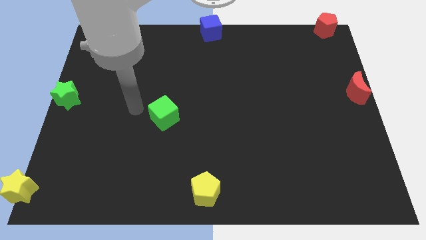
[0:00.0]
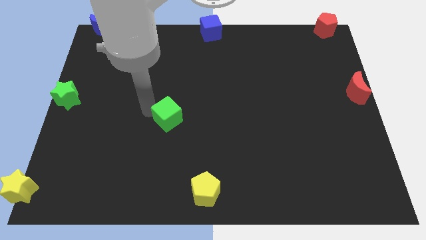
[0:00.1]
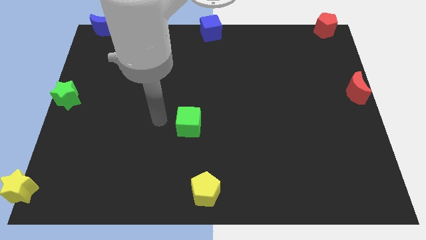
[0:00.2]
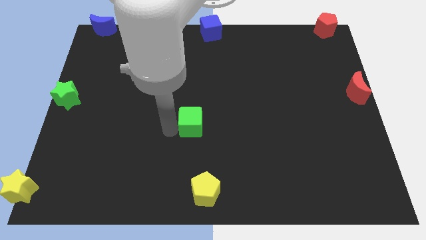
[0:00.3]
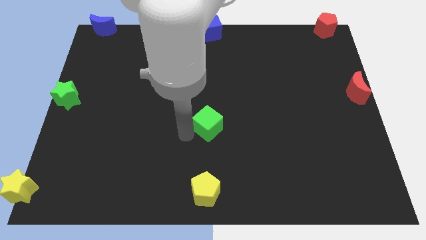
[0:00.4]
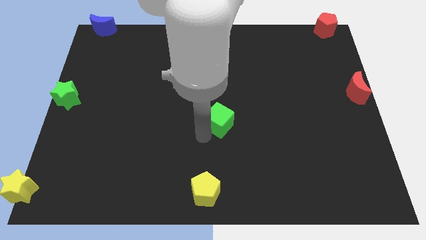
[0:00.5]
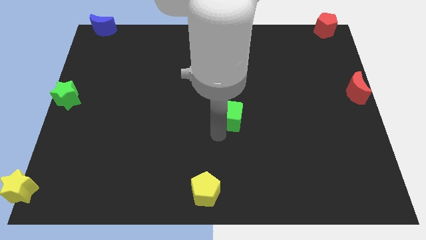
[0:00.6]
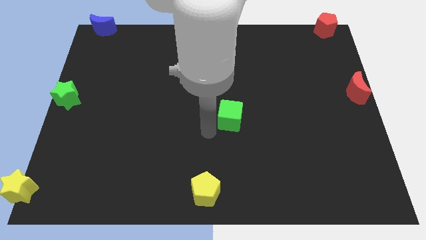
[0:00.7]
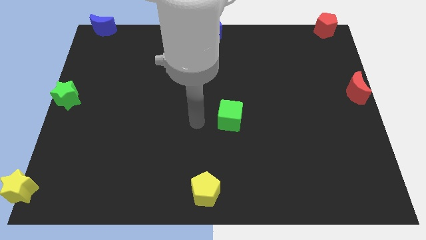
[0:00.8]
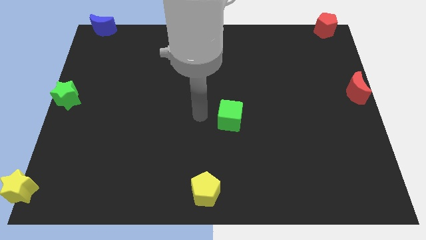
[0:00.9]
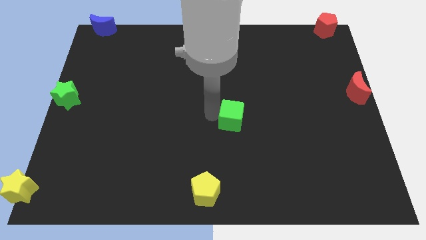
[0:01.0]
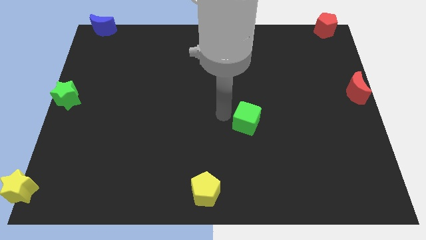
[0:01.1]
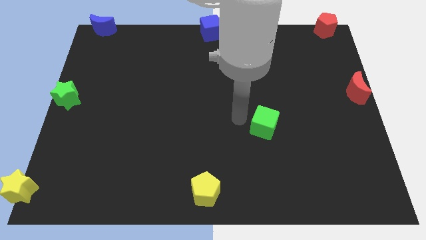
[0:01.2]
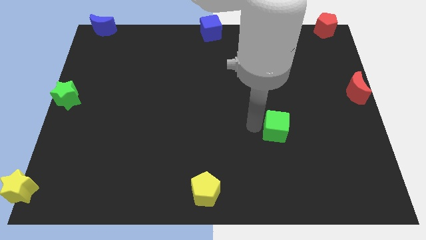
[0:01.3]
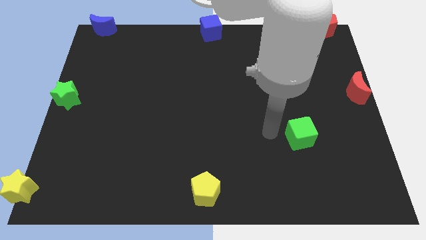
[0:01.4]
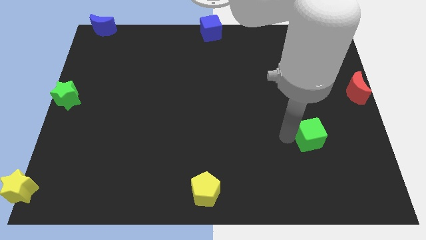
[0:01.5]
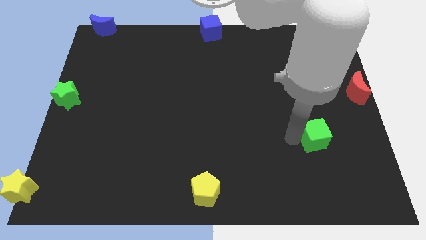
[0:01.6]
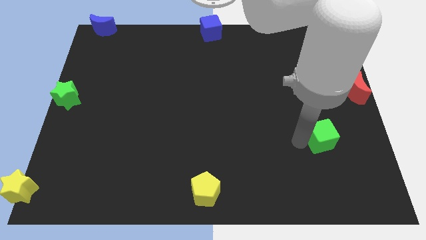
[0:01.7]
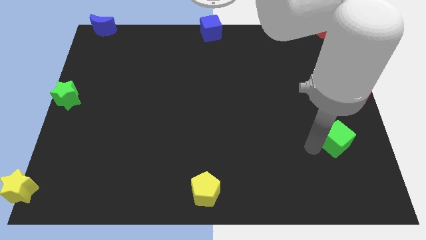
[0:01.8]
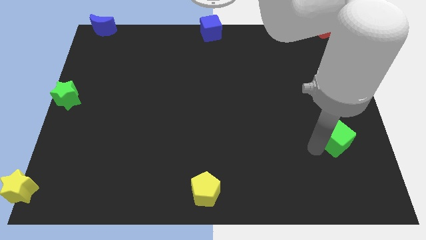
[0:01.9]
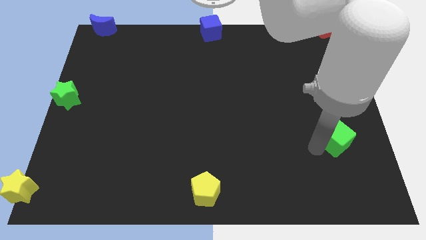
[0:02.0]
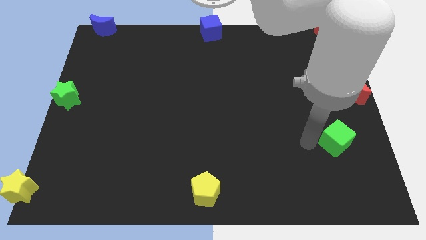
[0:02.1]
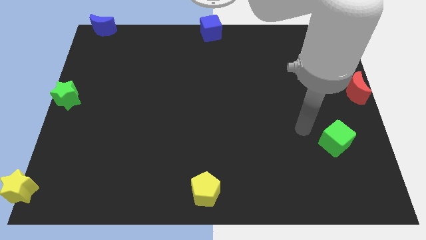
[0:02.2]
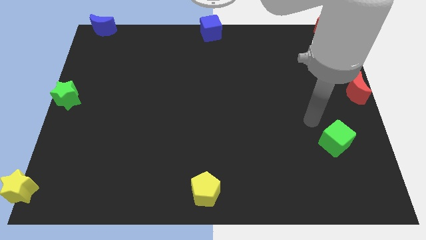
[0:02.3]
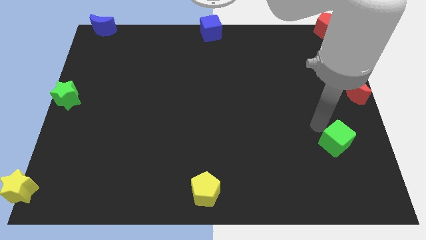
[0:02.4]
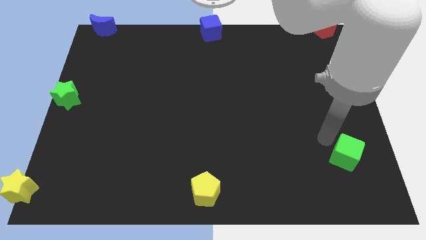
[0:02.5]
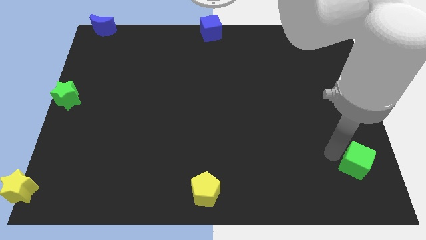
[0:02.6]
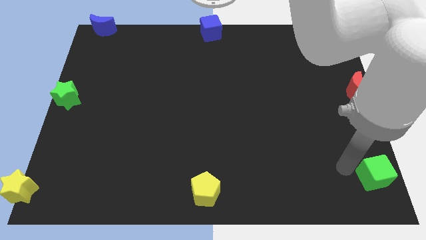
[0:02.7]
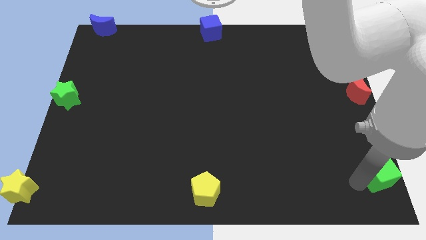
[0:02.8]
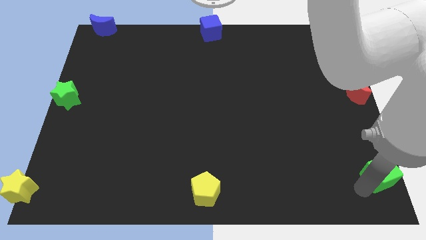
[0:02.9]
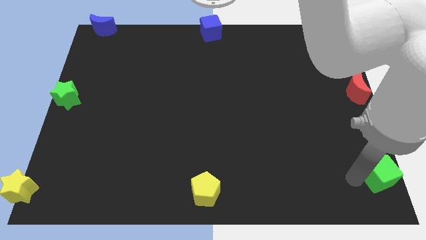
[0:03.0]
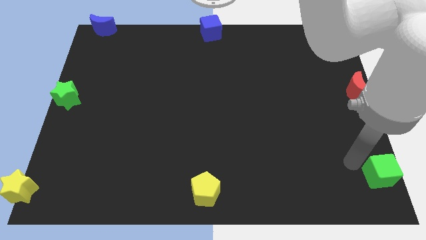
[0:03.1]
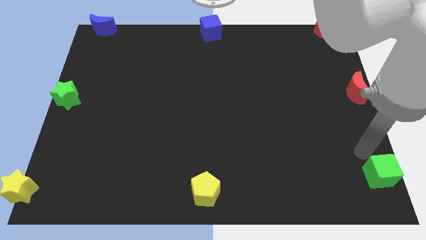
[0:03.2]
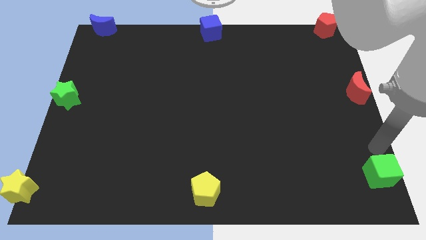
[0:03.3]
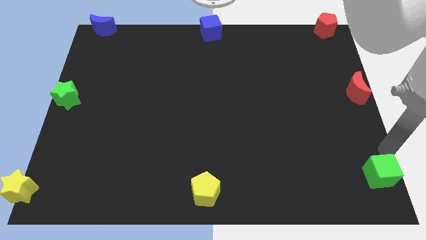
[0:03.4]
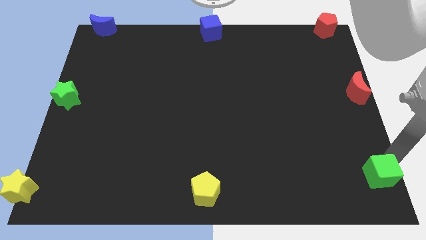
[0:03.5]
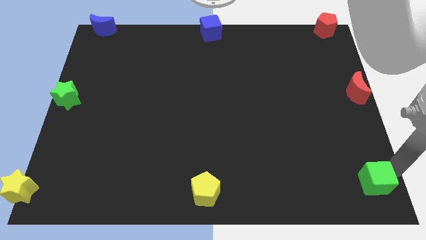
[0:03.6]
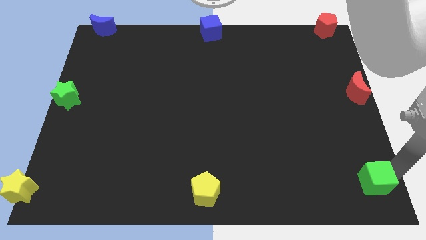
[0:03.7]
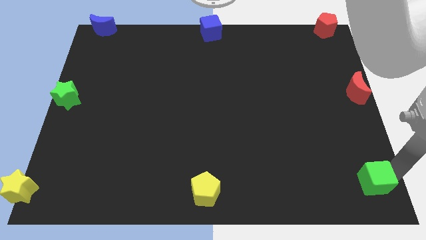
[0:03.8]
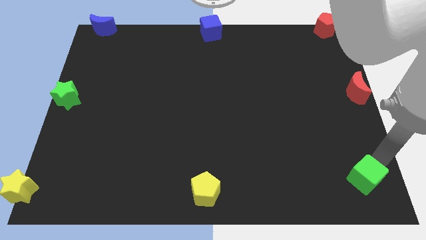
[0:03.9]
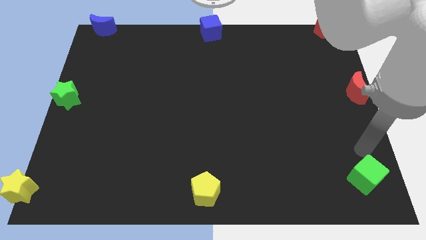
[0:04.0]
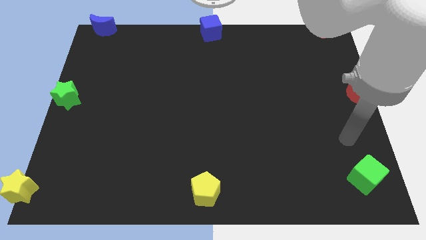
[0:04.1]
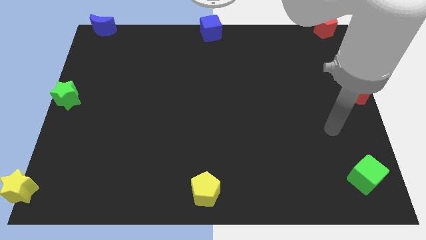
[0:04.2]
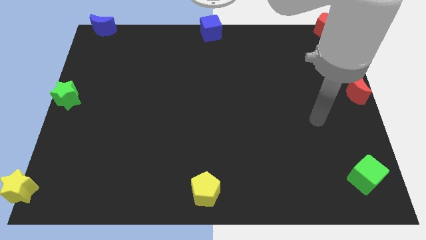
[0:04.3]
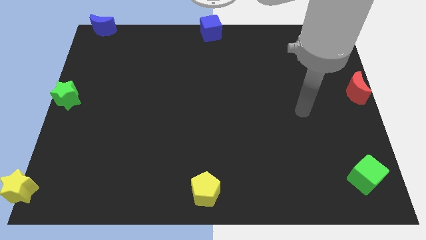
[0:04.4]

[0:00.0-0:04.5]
move the green cube to the bottom right

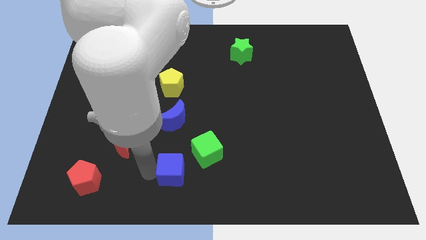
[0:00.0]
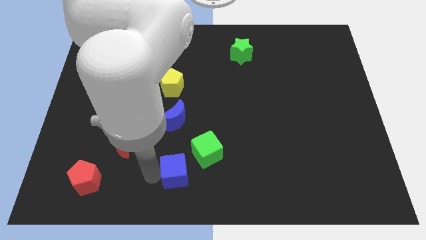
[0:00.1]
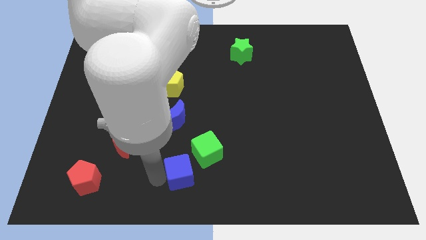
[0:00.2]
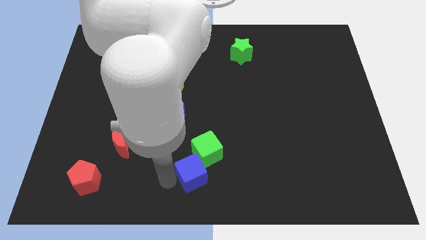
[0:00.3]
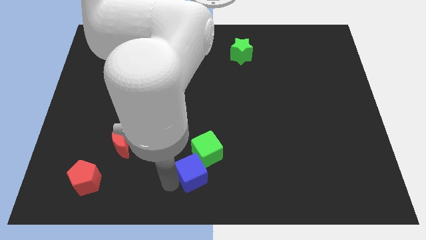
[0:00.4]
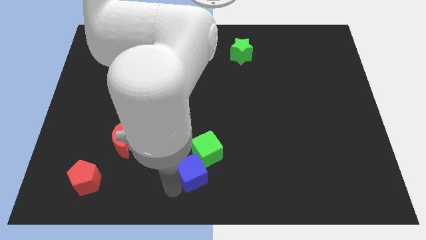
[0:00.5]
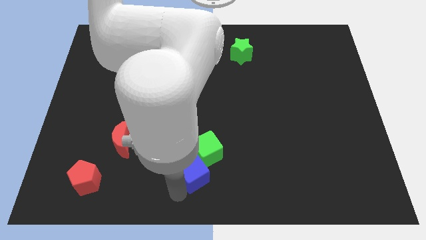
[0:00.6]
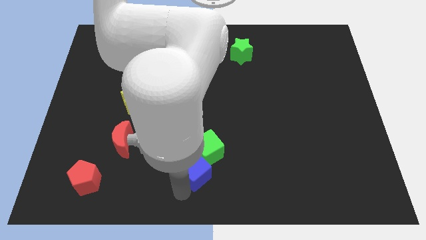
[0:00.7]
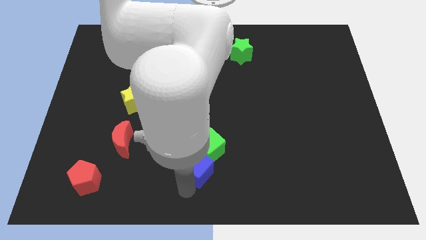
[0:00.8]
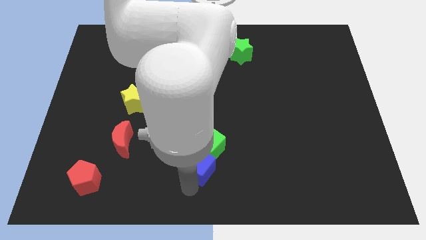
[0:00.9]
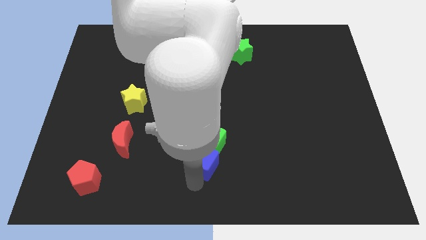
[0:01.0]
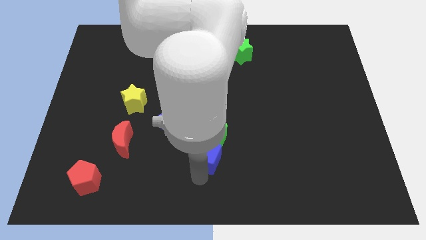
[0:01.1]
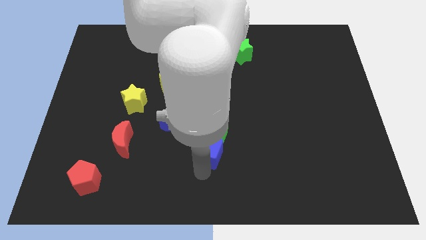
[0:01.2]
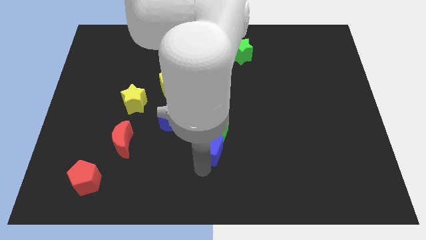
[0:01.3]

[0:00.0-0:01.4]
drag the blue cube into the green cube

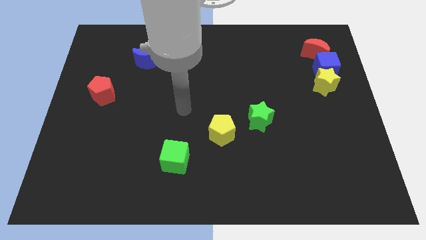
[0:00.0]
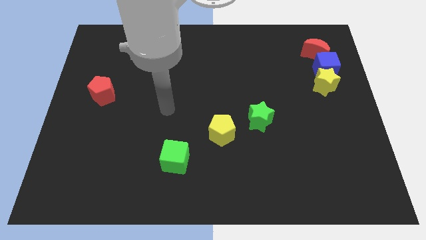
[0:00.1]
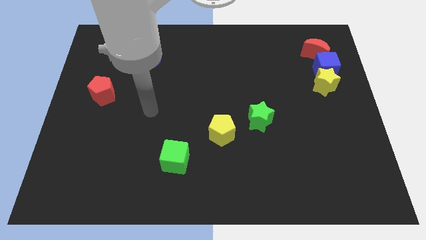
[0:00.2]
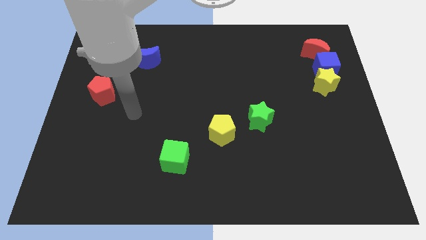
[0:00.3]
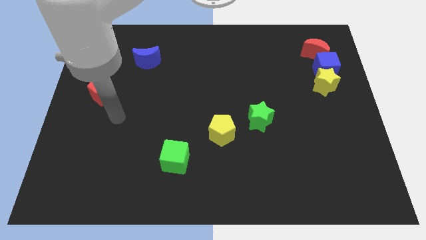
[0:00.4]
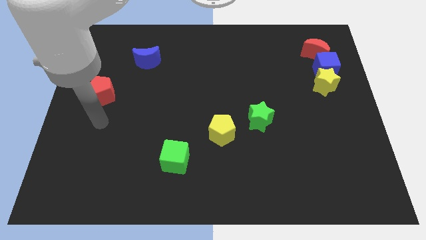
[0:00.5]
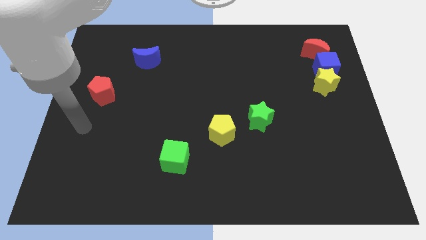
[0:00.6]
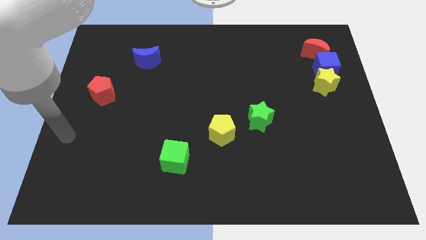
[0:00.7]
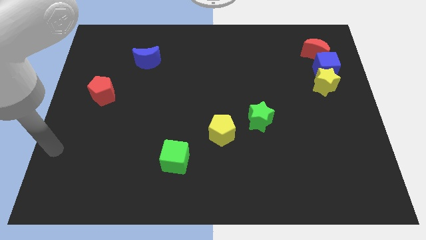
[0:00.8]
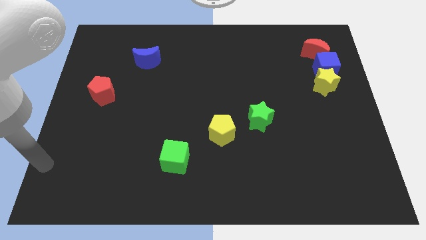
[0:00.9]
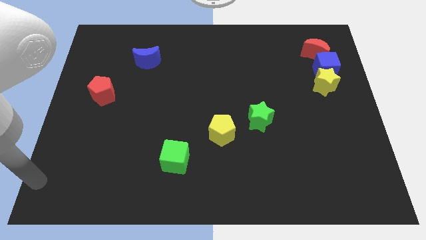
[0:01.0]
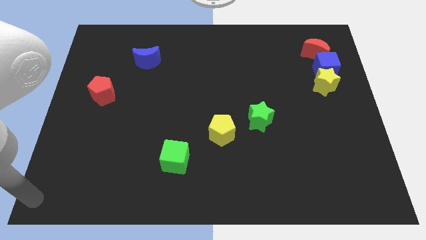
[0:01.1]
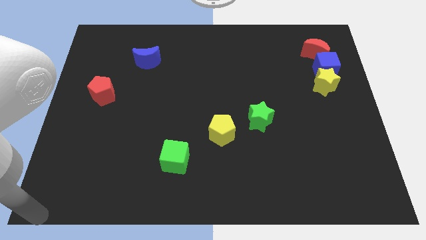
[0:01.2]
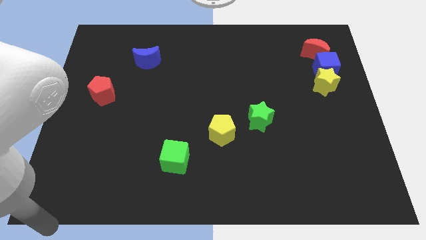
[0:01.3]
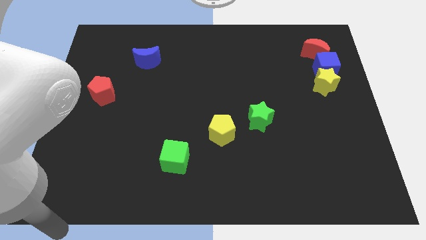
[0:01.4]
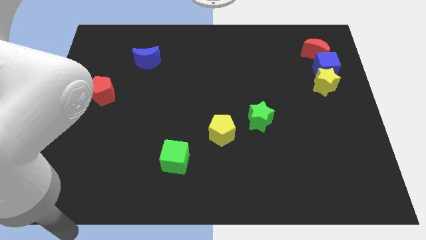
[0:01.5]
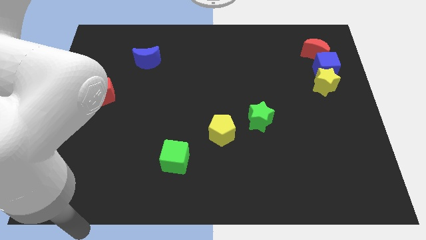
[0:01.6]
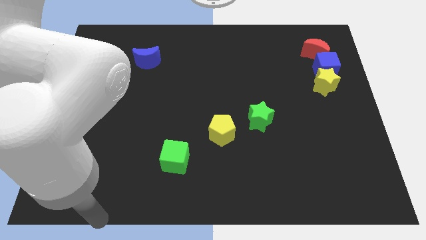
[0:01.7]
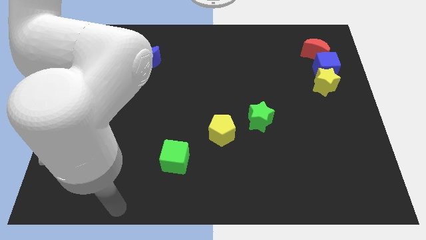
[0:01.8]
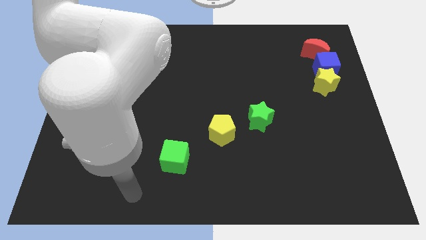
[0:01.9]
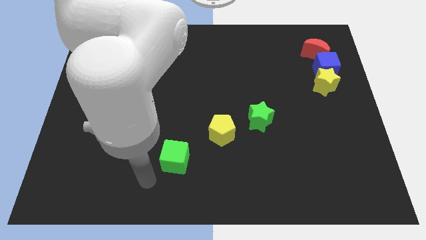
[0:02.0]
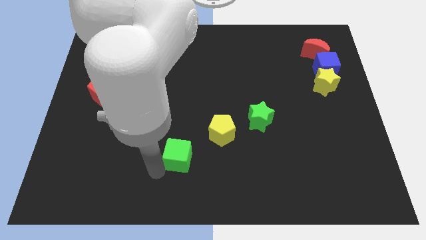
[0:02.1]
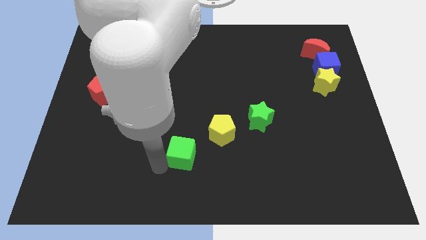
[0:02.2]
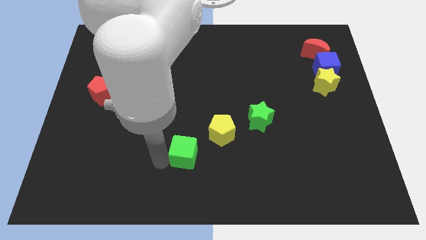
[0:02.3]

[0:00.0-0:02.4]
move arm near green cube

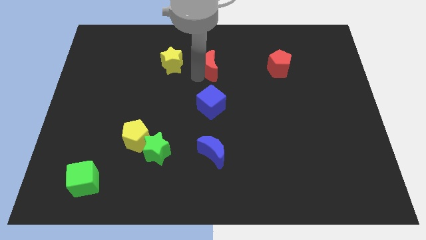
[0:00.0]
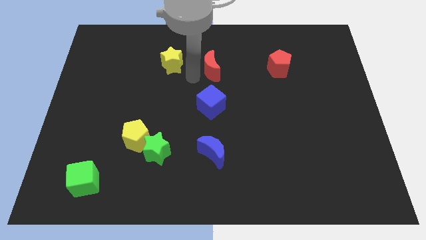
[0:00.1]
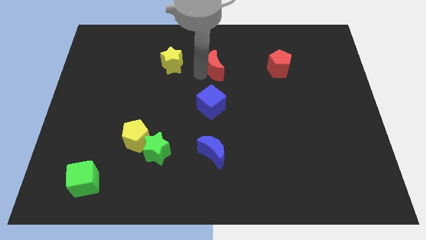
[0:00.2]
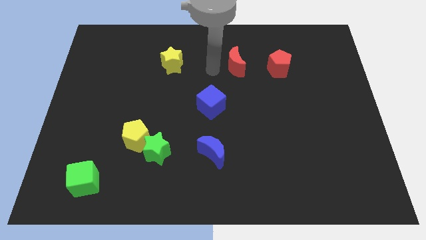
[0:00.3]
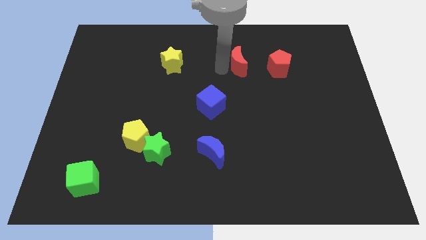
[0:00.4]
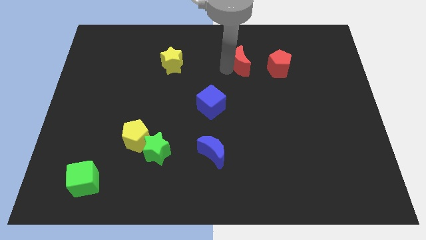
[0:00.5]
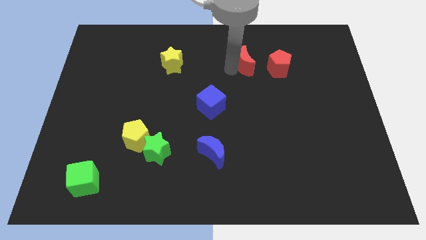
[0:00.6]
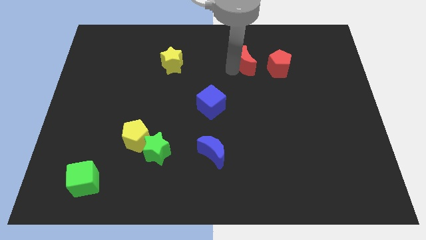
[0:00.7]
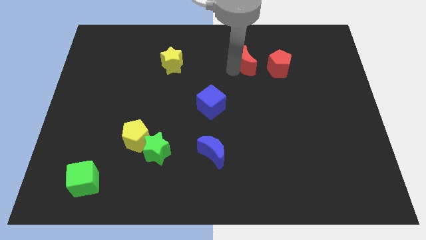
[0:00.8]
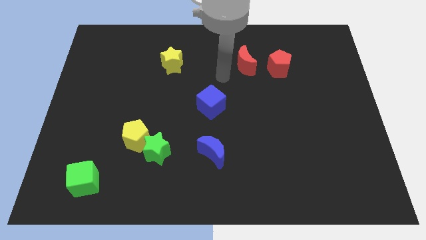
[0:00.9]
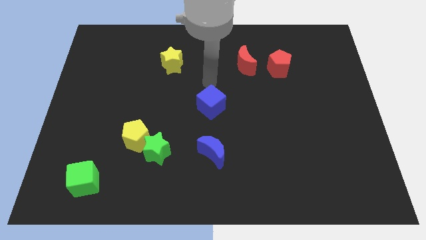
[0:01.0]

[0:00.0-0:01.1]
push red moon towards red pentagon
